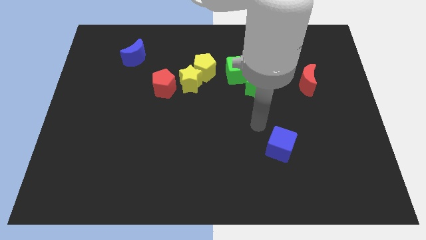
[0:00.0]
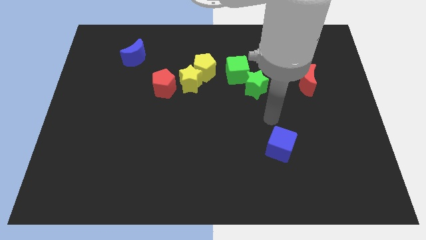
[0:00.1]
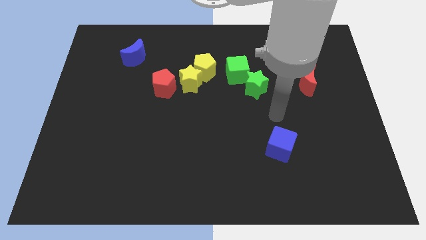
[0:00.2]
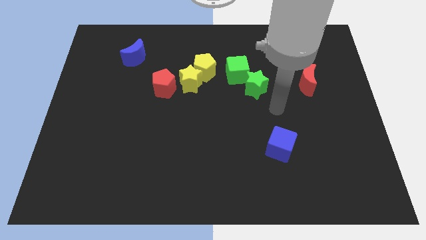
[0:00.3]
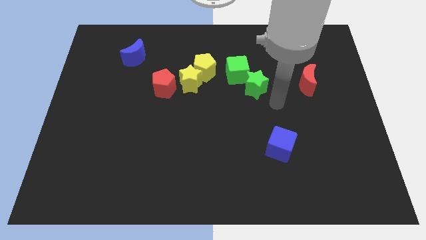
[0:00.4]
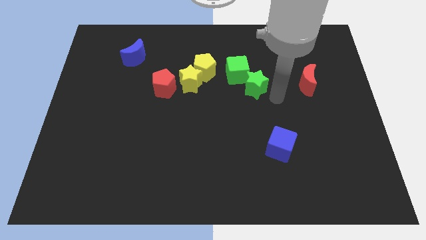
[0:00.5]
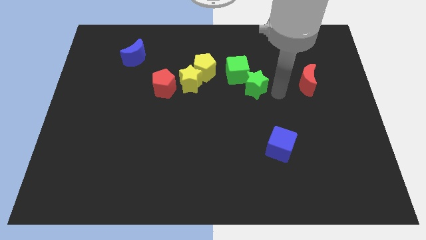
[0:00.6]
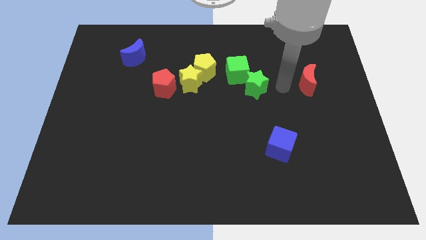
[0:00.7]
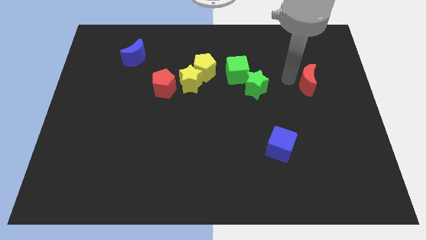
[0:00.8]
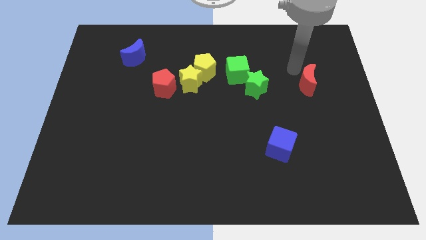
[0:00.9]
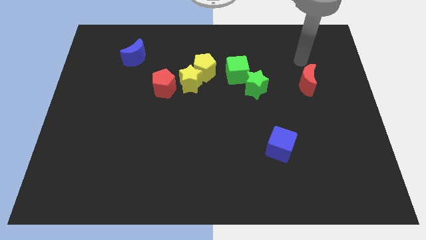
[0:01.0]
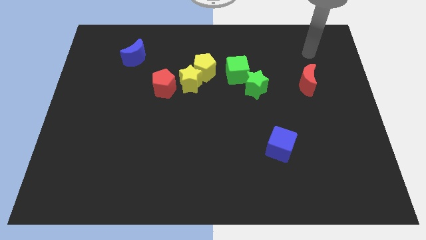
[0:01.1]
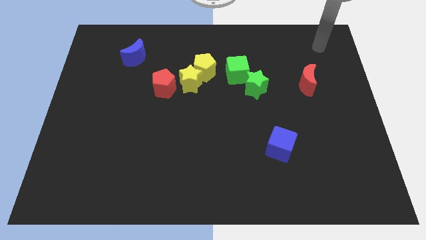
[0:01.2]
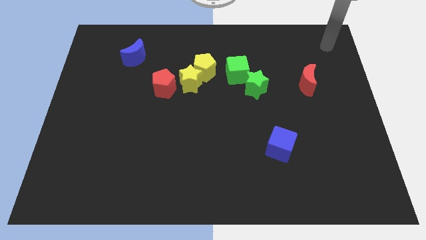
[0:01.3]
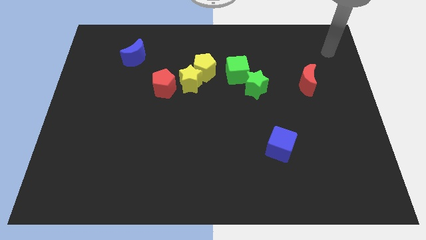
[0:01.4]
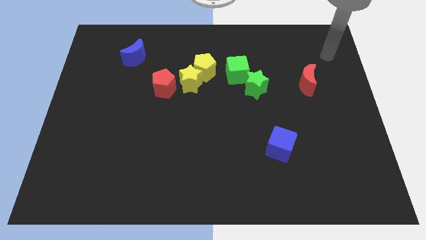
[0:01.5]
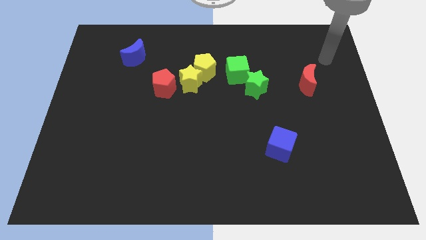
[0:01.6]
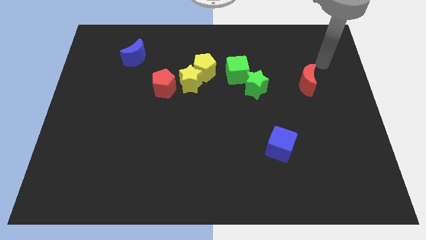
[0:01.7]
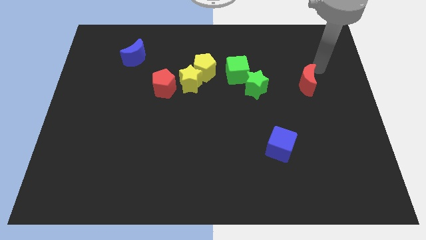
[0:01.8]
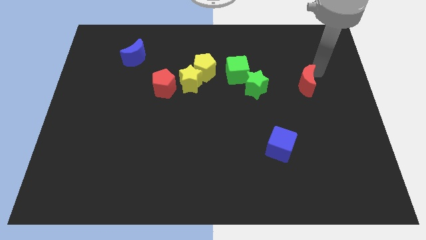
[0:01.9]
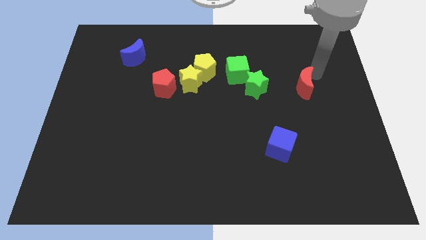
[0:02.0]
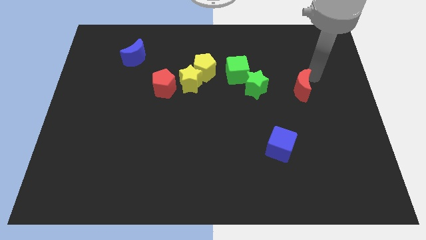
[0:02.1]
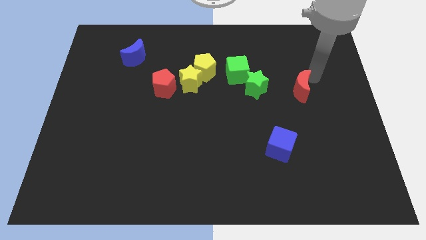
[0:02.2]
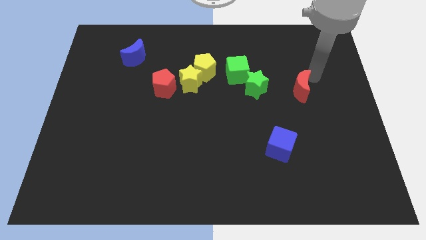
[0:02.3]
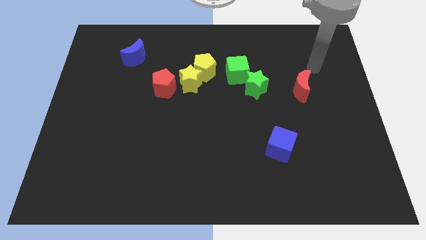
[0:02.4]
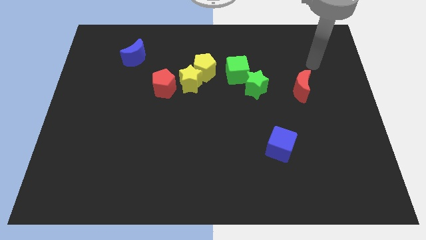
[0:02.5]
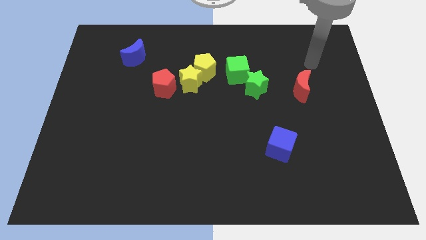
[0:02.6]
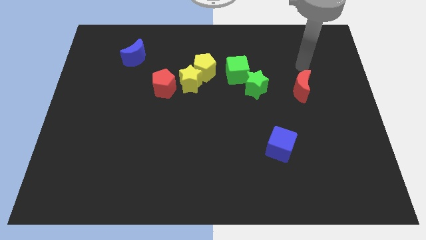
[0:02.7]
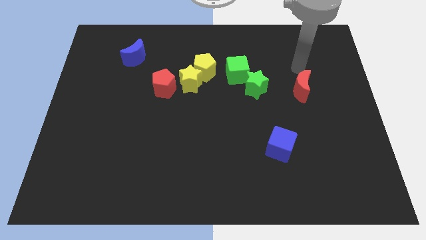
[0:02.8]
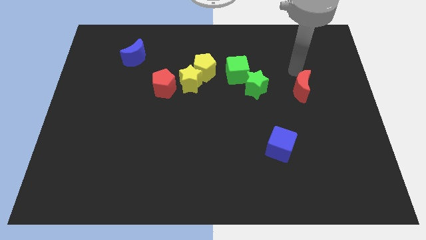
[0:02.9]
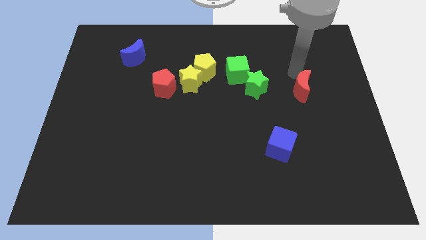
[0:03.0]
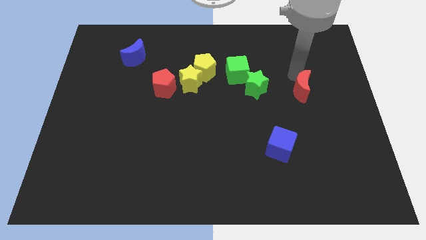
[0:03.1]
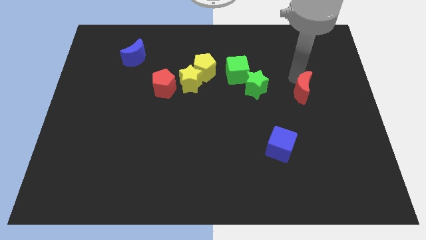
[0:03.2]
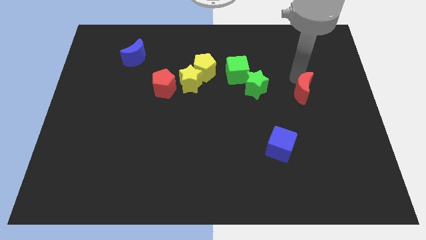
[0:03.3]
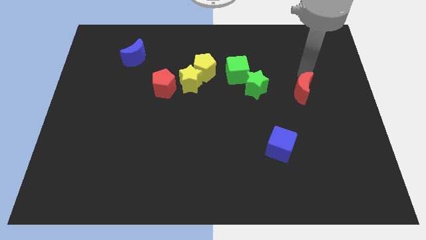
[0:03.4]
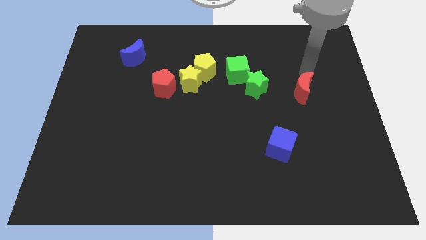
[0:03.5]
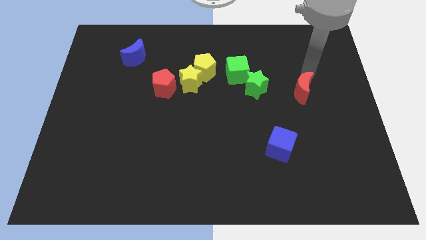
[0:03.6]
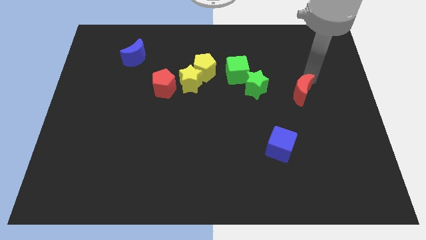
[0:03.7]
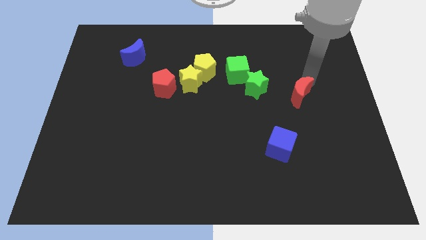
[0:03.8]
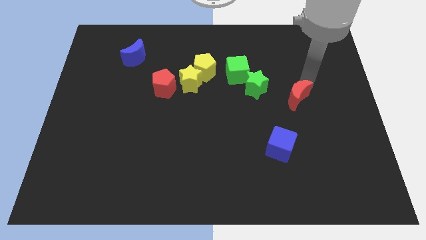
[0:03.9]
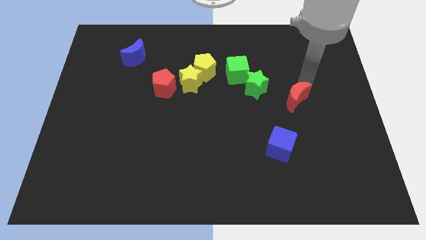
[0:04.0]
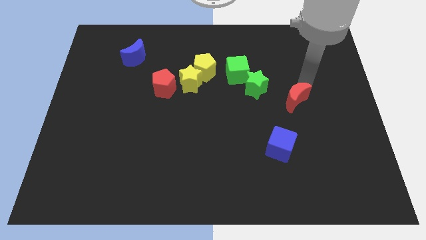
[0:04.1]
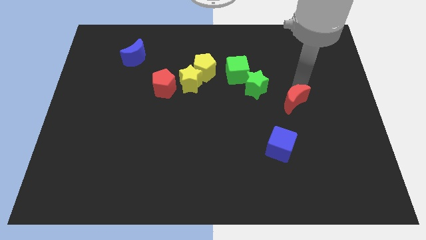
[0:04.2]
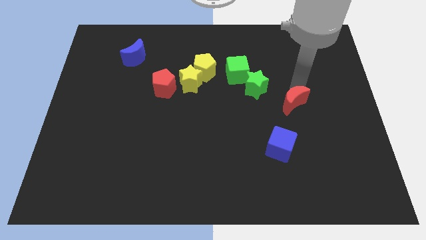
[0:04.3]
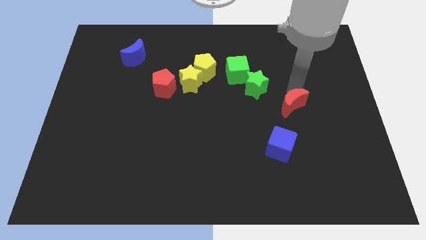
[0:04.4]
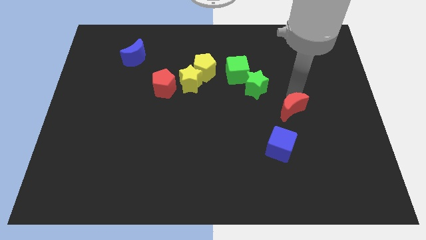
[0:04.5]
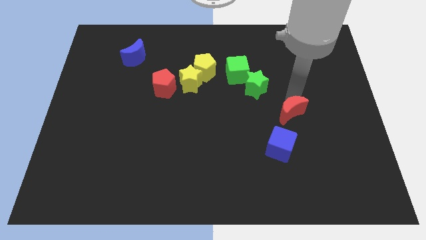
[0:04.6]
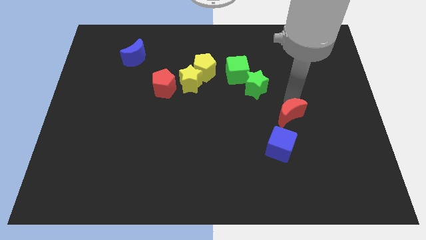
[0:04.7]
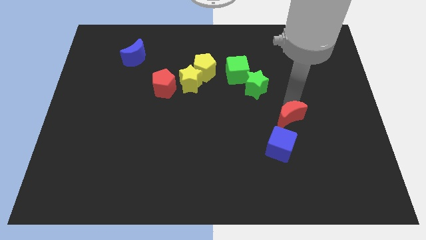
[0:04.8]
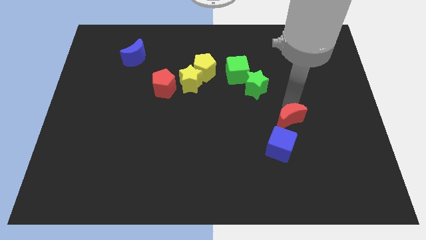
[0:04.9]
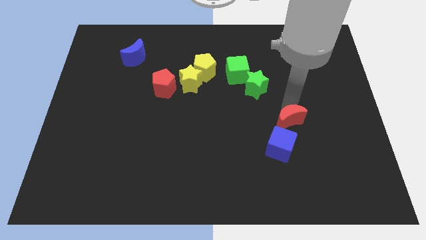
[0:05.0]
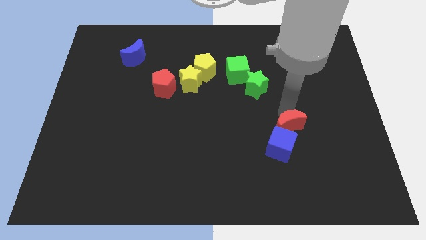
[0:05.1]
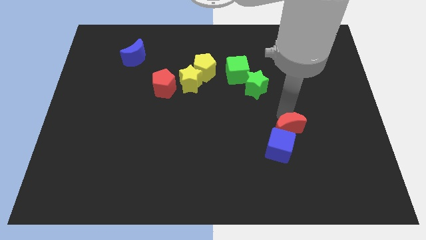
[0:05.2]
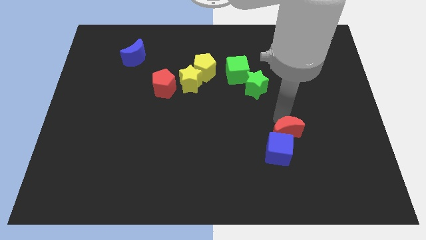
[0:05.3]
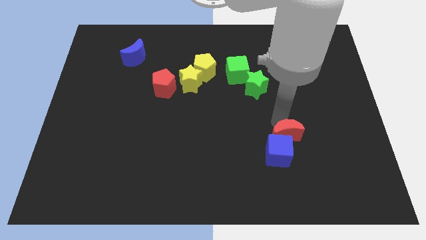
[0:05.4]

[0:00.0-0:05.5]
push the red crescent to the top of the blue cube

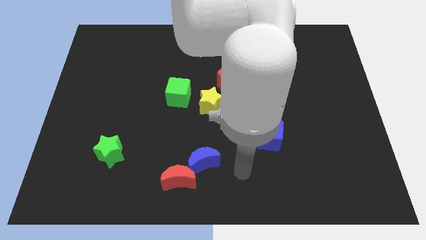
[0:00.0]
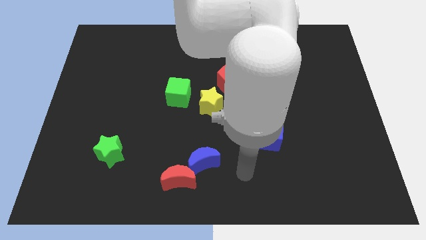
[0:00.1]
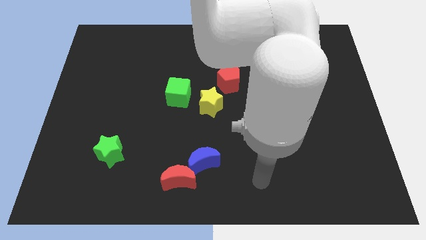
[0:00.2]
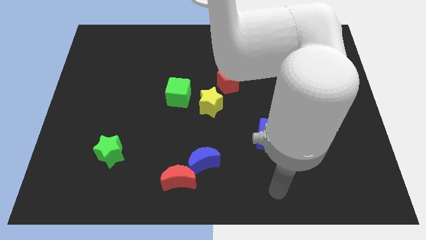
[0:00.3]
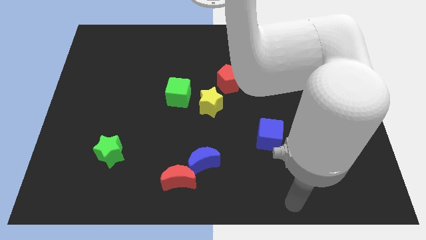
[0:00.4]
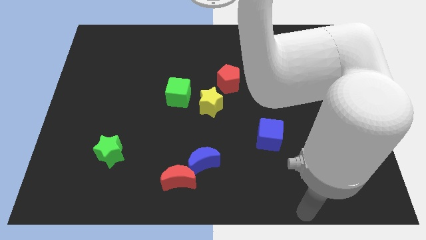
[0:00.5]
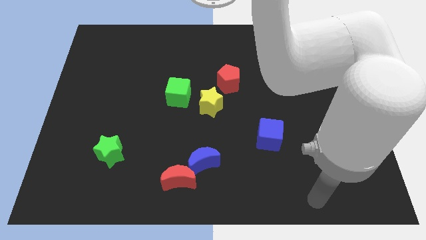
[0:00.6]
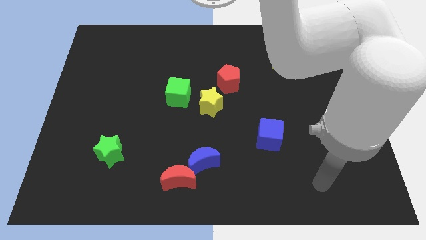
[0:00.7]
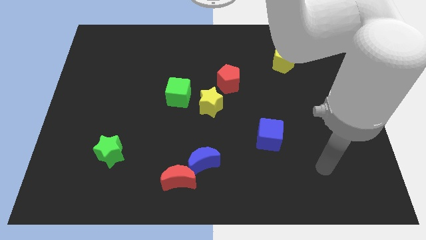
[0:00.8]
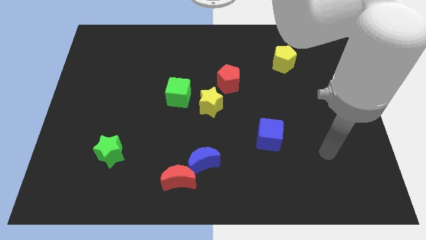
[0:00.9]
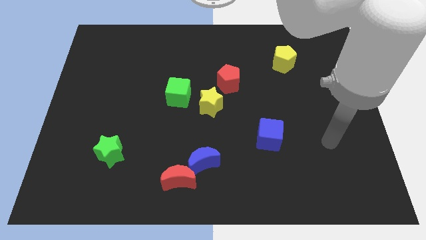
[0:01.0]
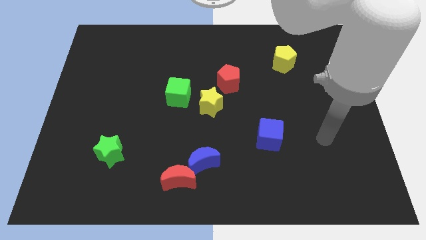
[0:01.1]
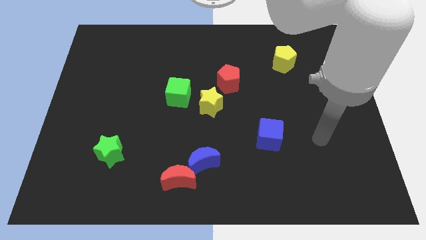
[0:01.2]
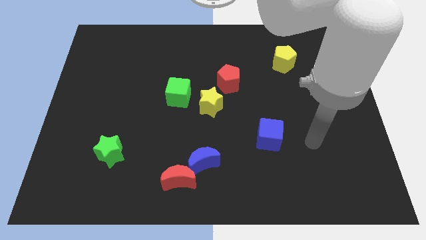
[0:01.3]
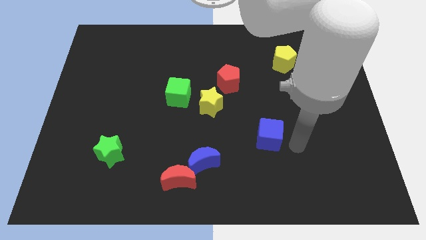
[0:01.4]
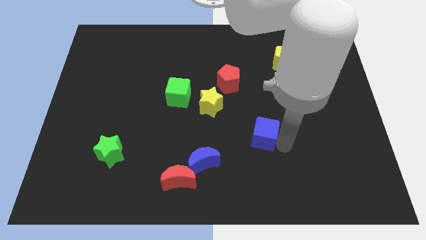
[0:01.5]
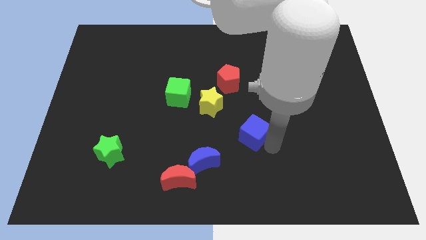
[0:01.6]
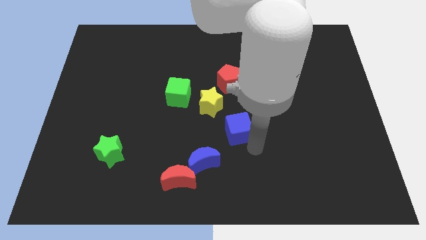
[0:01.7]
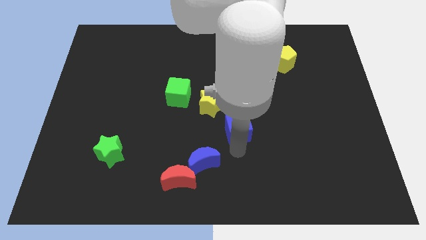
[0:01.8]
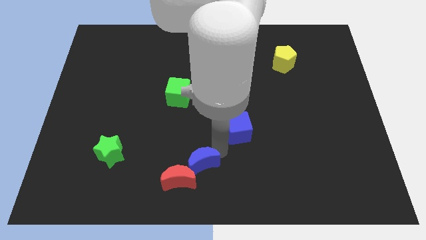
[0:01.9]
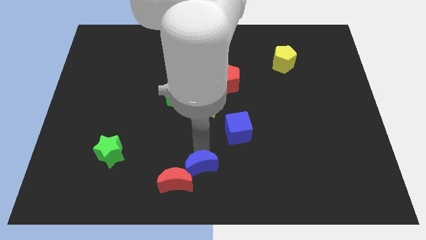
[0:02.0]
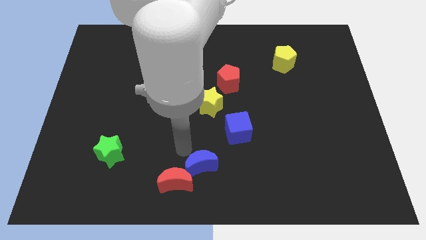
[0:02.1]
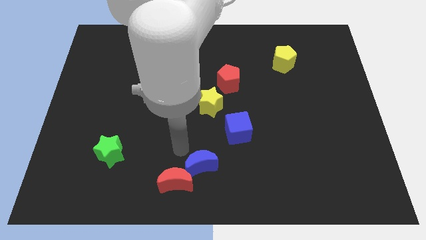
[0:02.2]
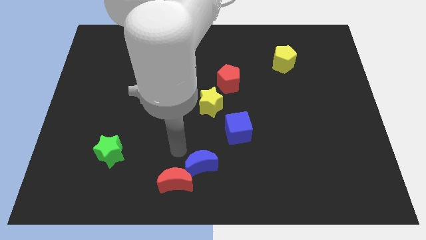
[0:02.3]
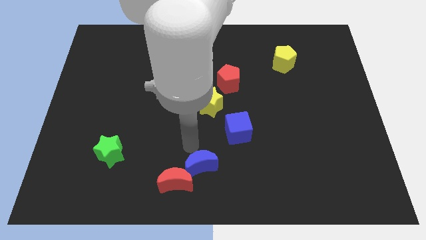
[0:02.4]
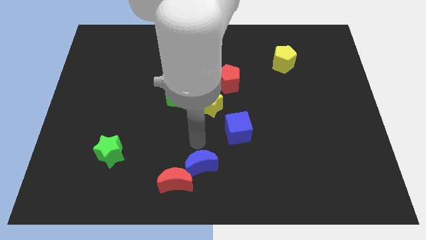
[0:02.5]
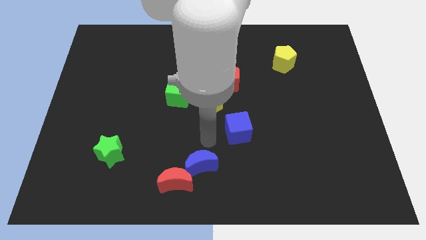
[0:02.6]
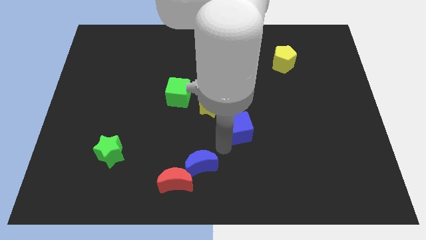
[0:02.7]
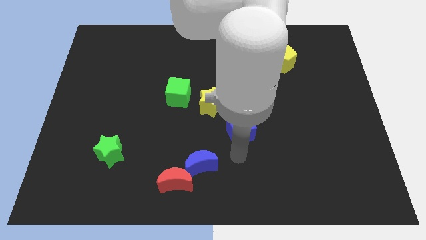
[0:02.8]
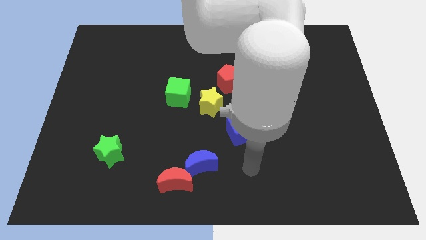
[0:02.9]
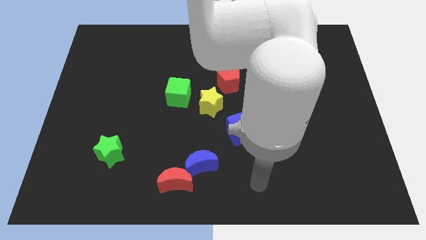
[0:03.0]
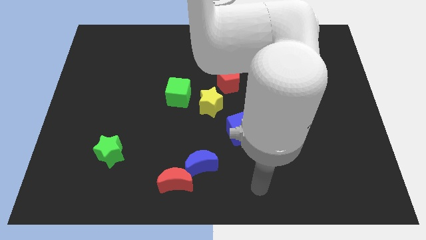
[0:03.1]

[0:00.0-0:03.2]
move blue cube to the bottom right of the yellow star

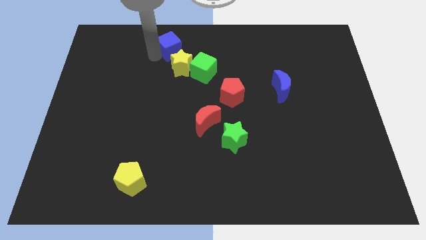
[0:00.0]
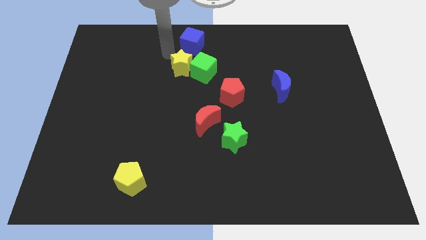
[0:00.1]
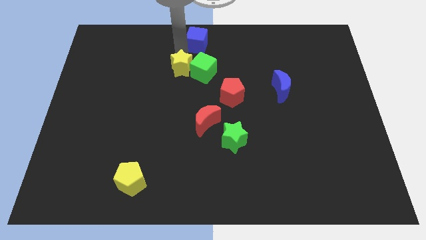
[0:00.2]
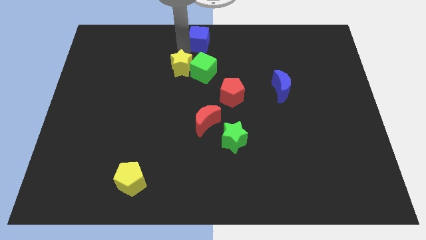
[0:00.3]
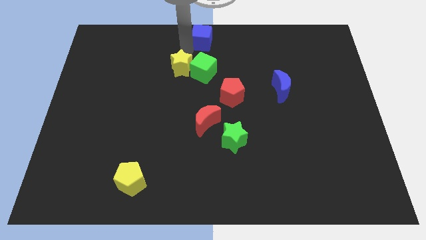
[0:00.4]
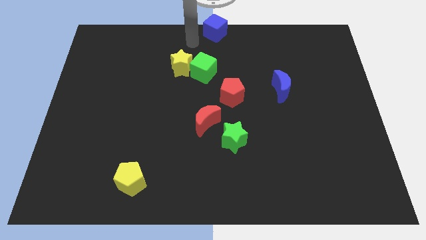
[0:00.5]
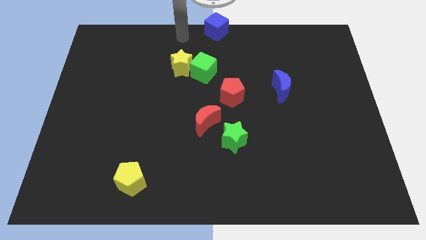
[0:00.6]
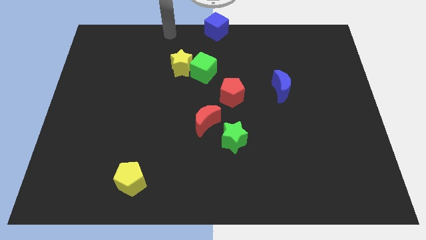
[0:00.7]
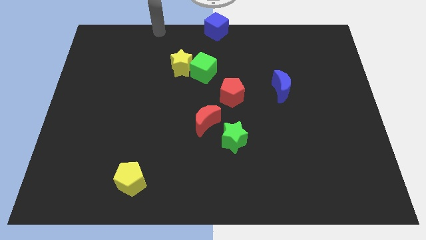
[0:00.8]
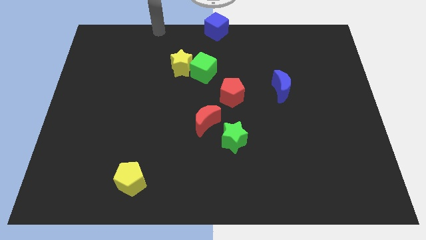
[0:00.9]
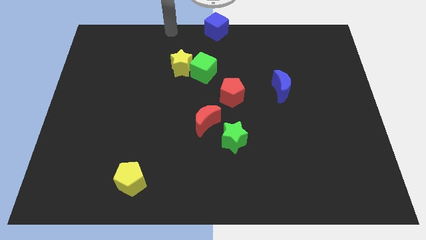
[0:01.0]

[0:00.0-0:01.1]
place the blue cube above the green cube
